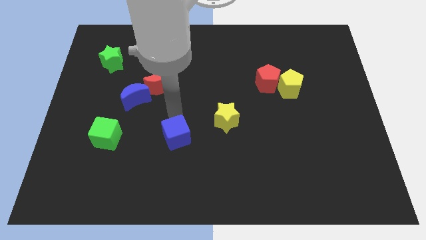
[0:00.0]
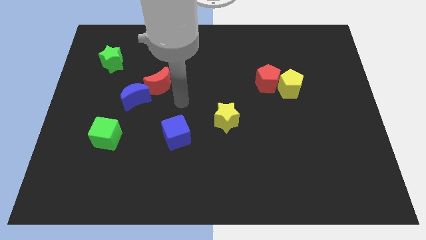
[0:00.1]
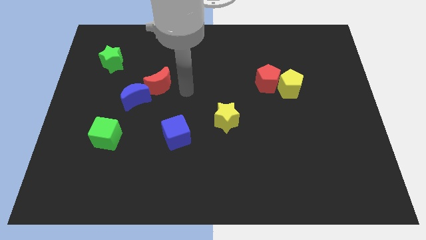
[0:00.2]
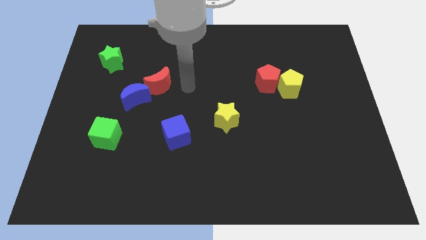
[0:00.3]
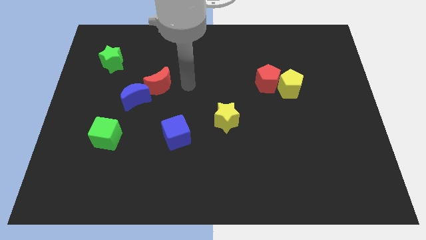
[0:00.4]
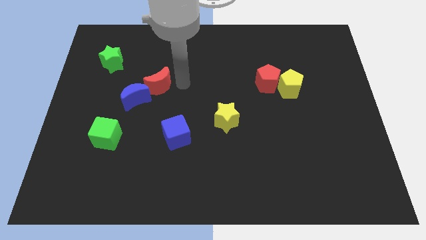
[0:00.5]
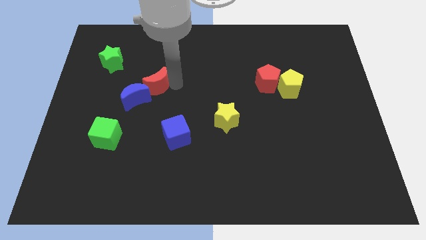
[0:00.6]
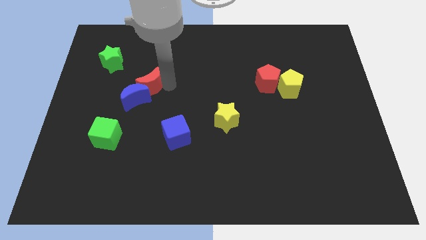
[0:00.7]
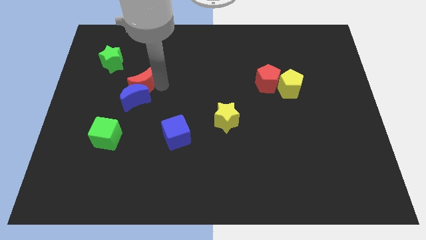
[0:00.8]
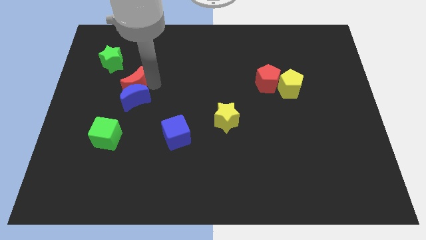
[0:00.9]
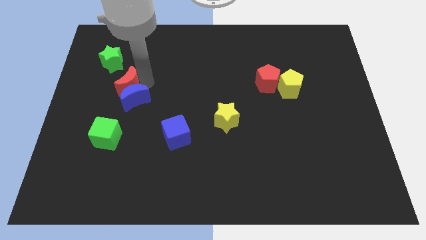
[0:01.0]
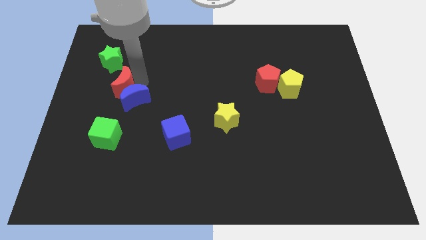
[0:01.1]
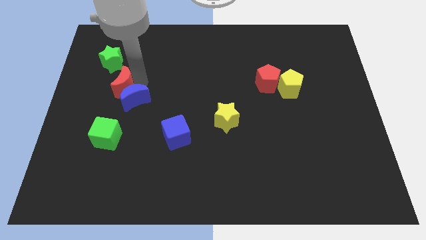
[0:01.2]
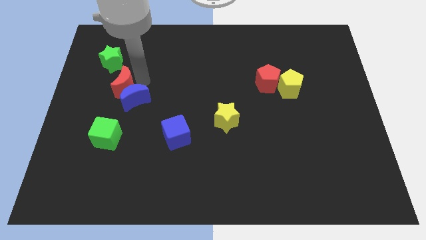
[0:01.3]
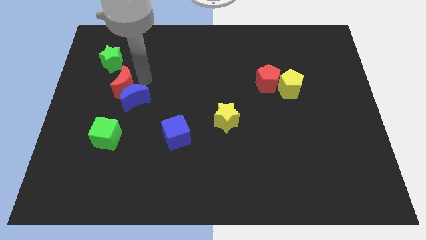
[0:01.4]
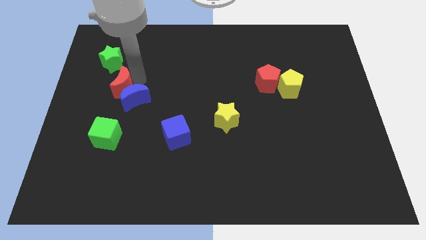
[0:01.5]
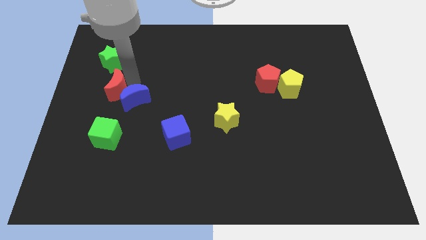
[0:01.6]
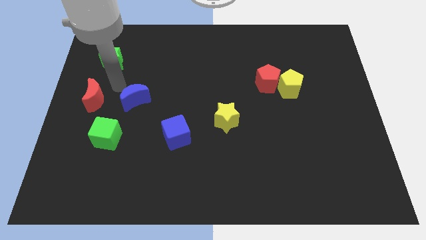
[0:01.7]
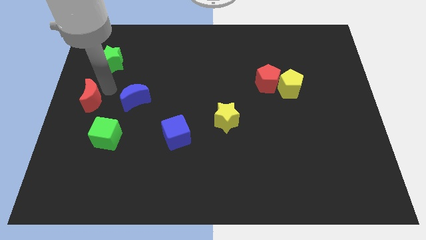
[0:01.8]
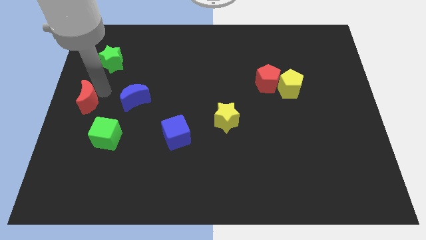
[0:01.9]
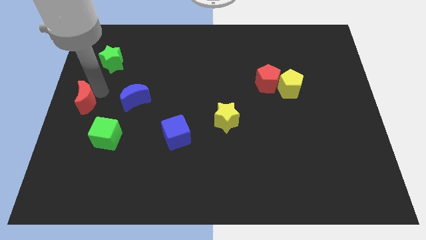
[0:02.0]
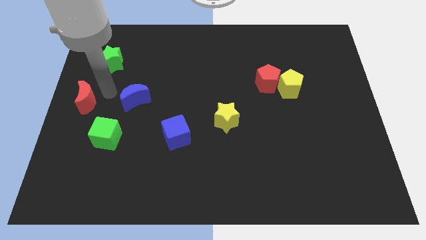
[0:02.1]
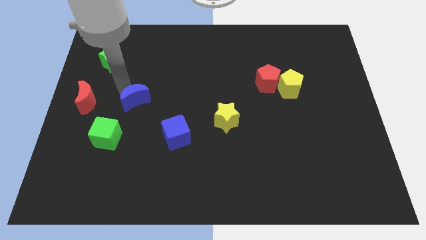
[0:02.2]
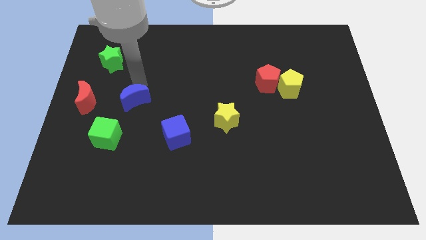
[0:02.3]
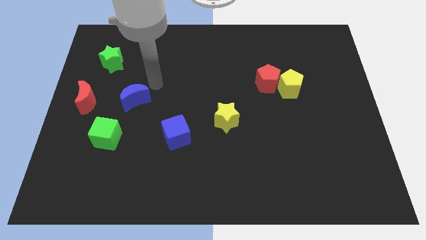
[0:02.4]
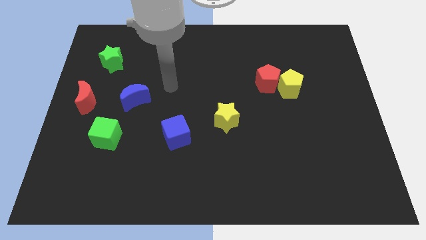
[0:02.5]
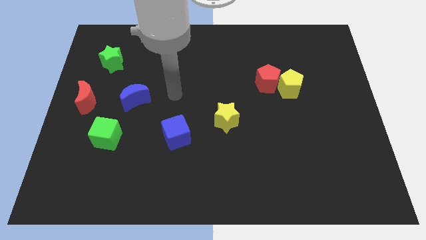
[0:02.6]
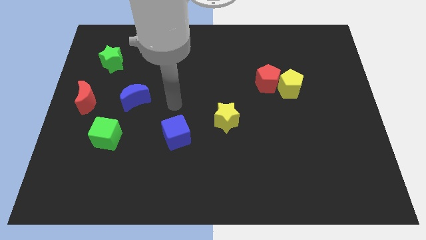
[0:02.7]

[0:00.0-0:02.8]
slide the red moon to the left center of the board

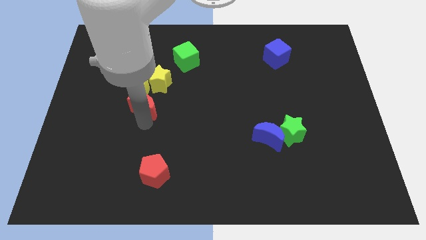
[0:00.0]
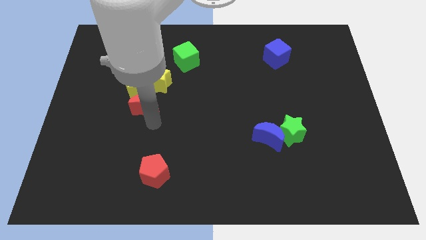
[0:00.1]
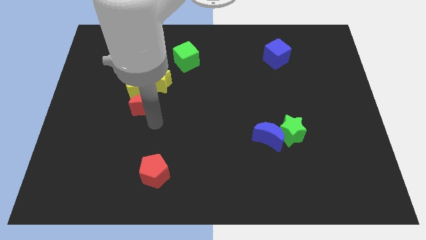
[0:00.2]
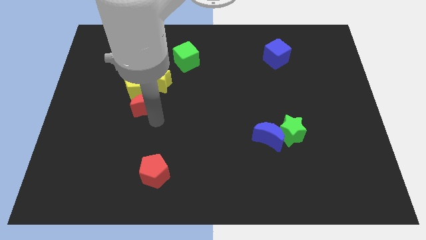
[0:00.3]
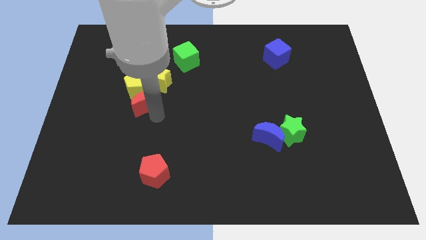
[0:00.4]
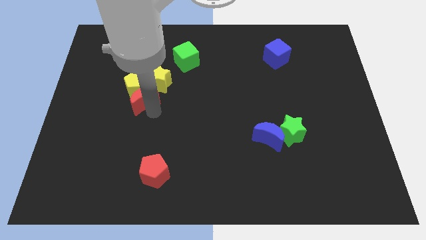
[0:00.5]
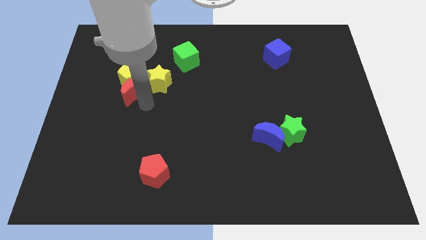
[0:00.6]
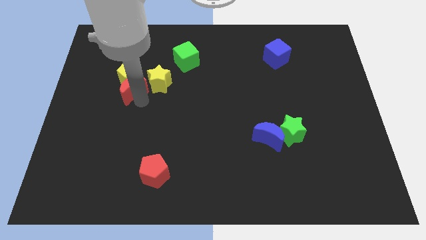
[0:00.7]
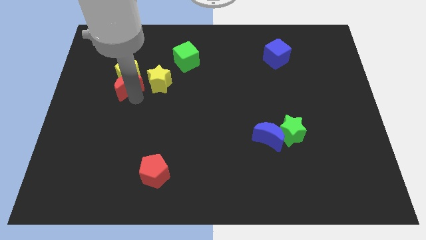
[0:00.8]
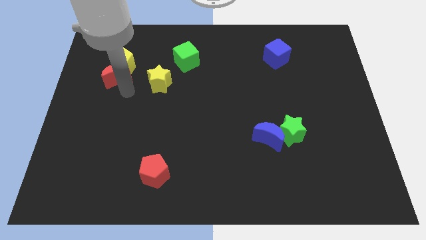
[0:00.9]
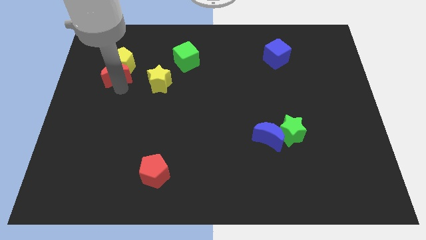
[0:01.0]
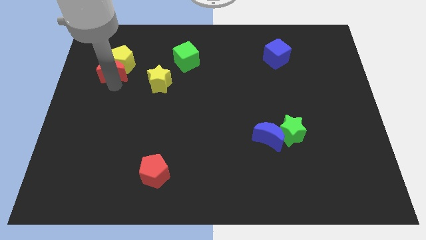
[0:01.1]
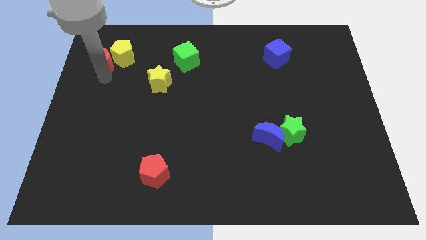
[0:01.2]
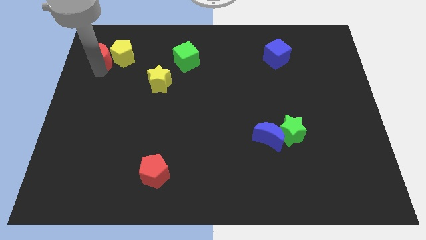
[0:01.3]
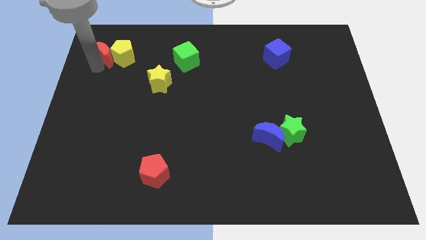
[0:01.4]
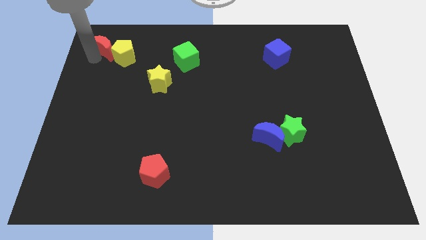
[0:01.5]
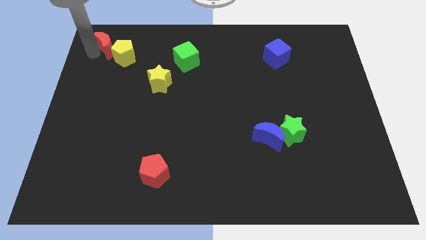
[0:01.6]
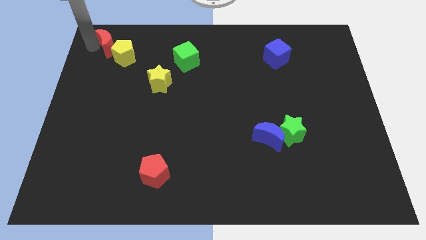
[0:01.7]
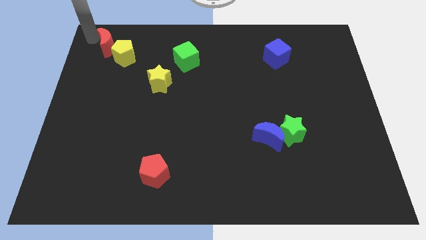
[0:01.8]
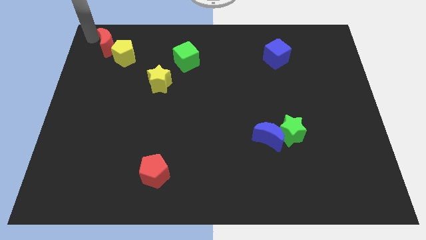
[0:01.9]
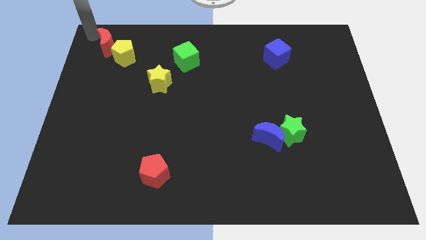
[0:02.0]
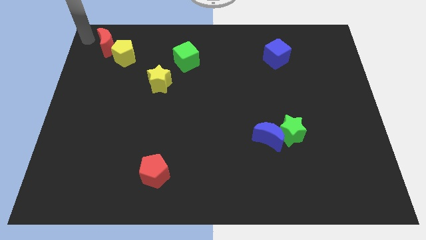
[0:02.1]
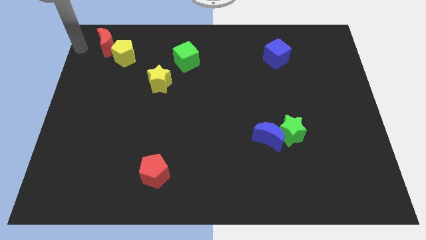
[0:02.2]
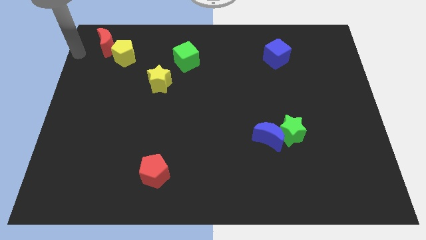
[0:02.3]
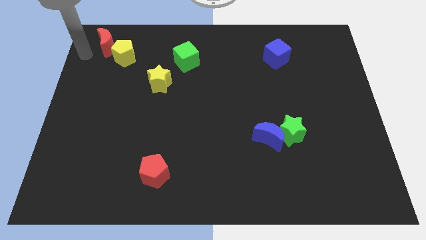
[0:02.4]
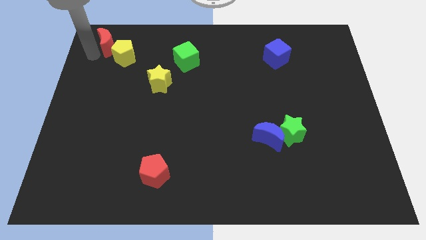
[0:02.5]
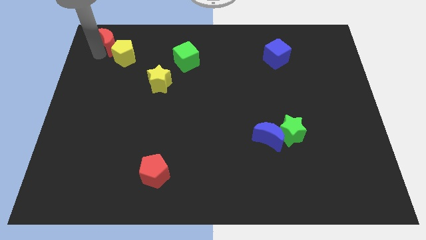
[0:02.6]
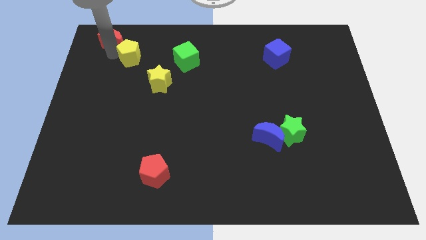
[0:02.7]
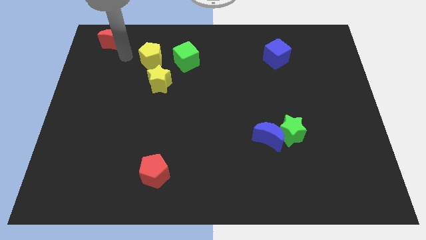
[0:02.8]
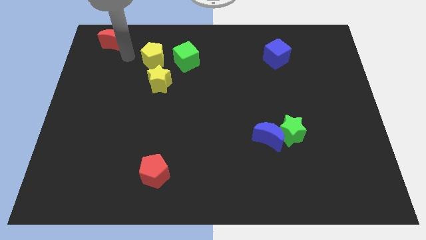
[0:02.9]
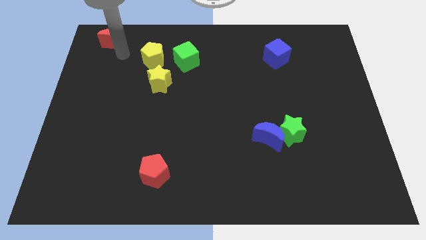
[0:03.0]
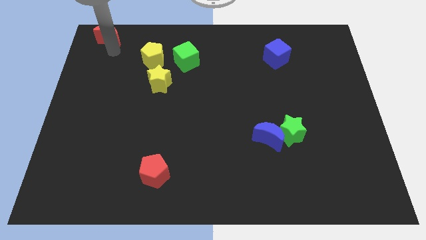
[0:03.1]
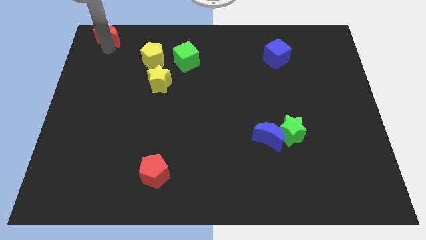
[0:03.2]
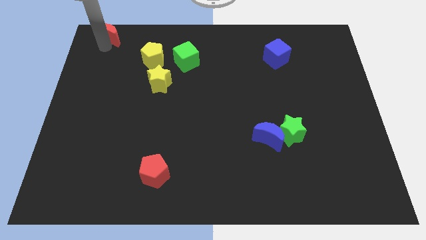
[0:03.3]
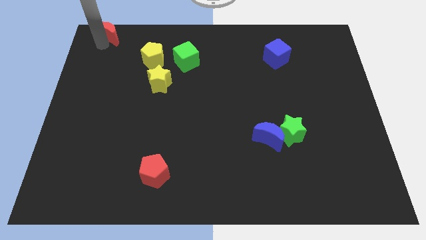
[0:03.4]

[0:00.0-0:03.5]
move red moon to the top left corner of the board

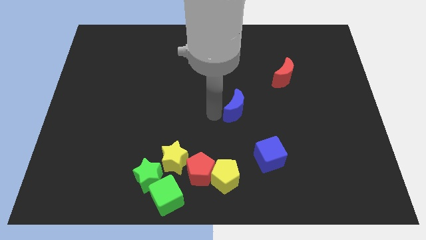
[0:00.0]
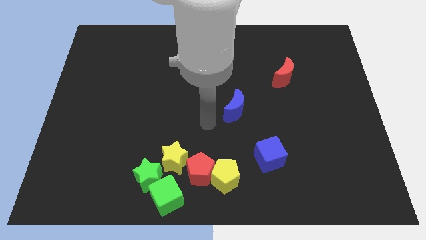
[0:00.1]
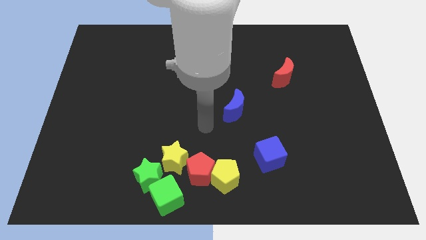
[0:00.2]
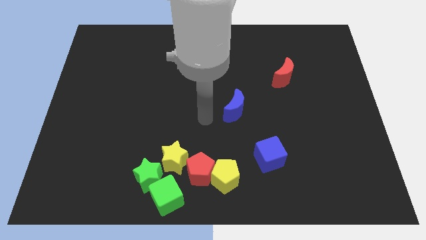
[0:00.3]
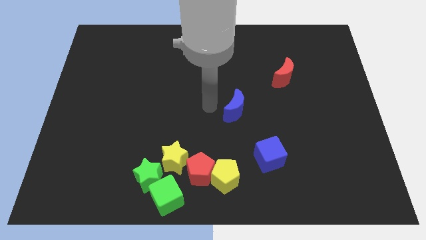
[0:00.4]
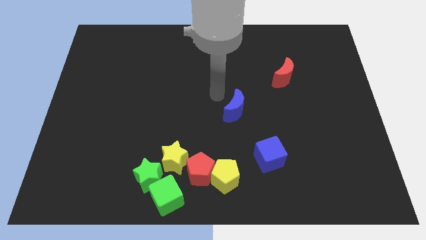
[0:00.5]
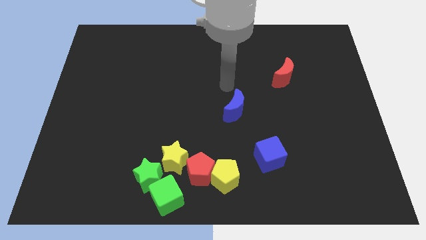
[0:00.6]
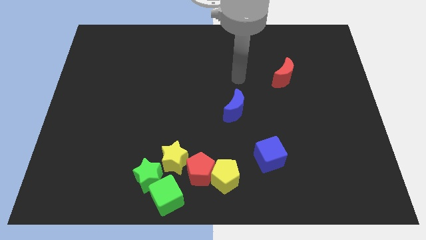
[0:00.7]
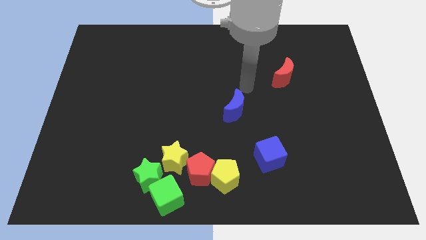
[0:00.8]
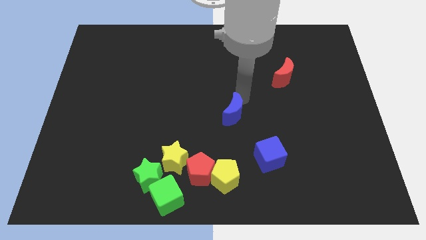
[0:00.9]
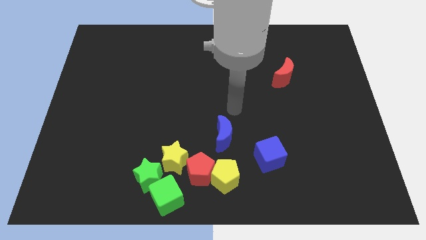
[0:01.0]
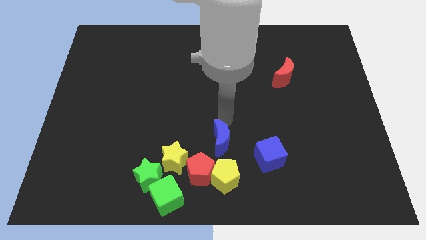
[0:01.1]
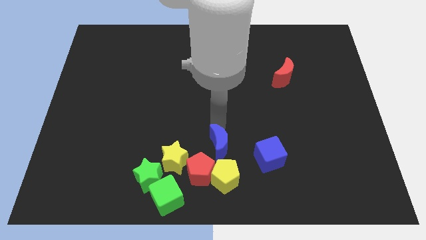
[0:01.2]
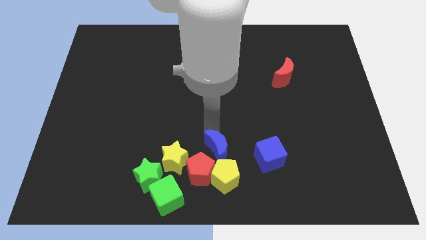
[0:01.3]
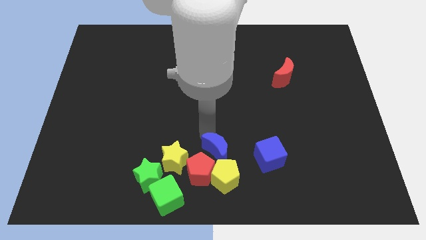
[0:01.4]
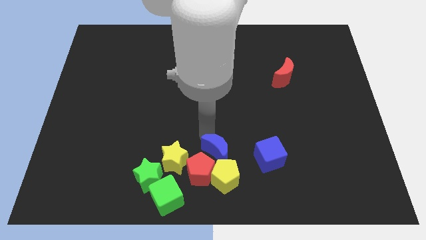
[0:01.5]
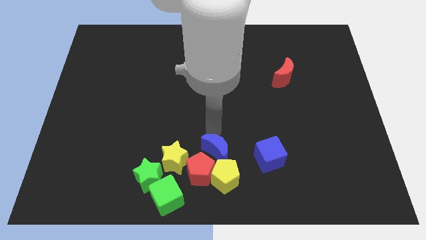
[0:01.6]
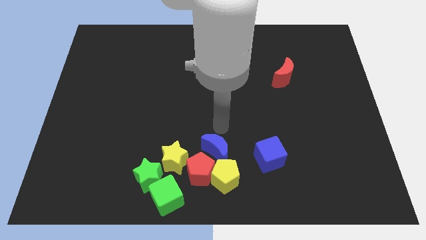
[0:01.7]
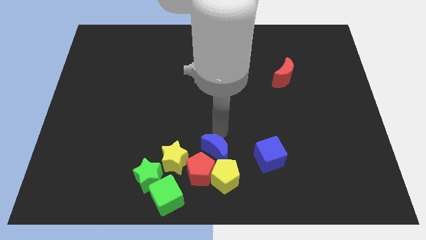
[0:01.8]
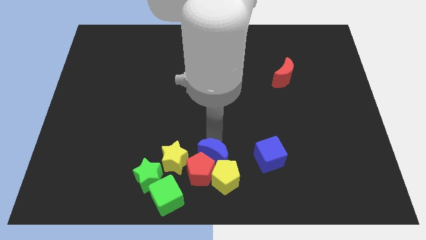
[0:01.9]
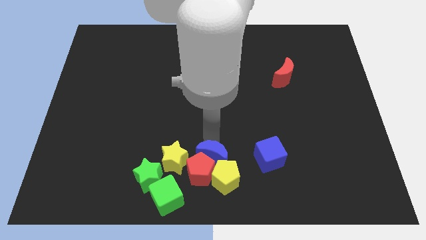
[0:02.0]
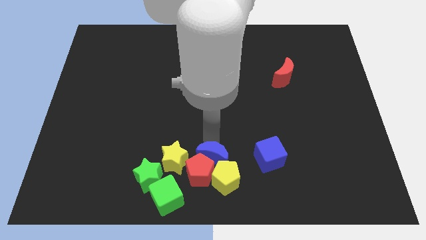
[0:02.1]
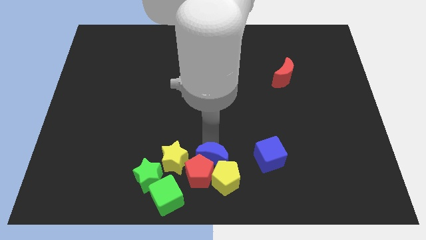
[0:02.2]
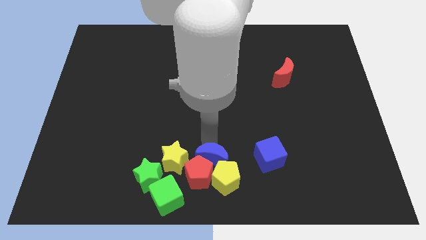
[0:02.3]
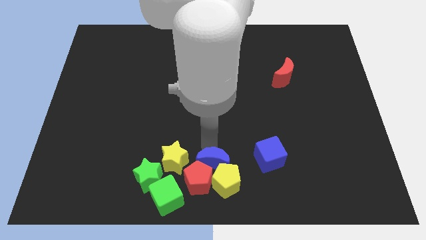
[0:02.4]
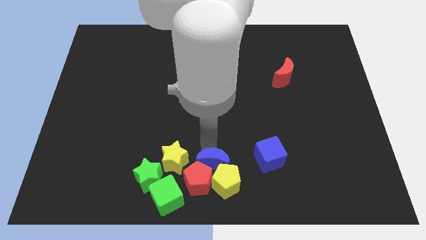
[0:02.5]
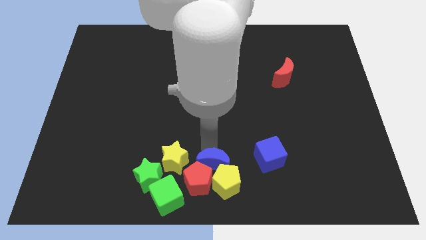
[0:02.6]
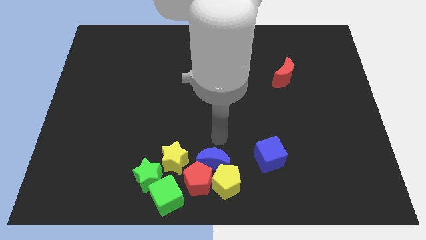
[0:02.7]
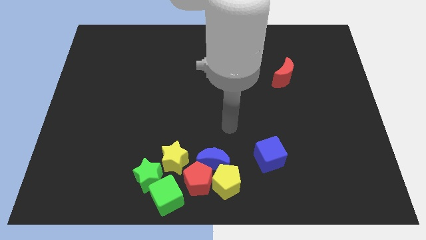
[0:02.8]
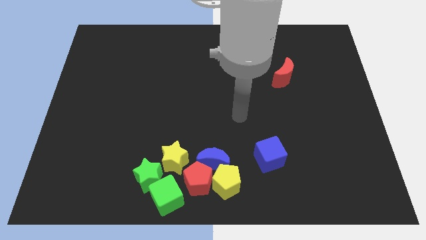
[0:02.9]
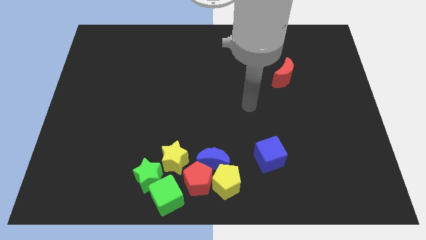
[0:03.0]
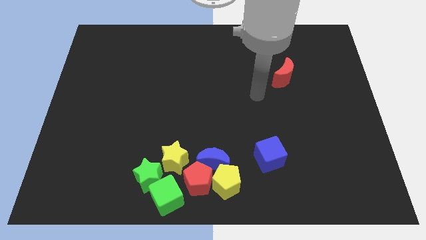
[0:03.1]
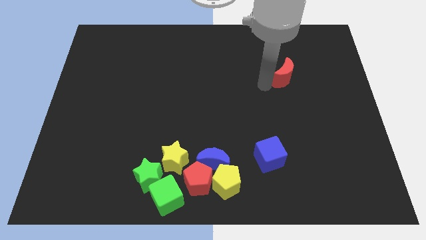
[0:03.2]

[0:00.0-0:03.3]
push the blue crescent into the red pentagon
